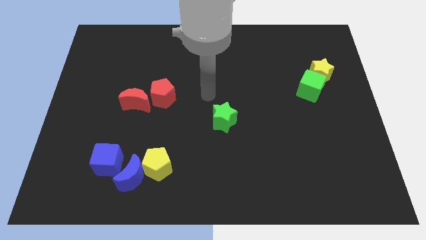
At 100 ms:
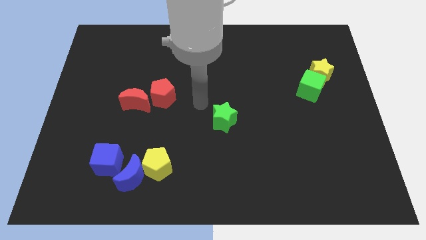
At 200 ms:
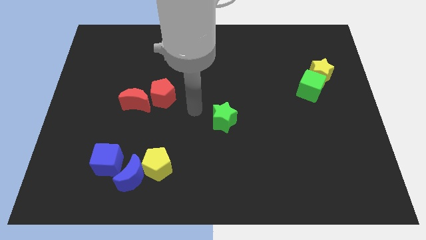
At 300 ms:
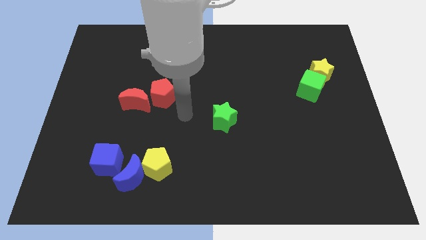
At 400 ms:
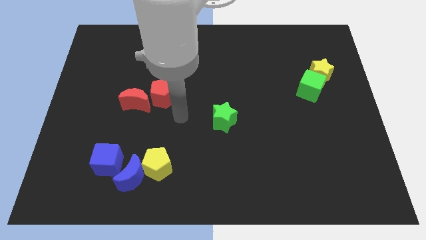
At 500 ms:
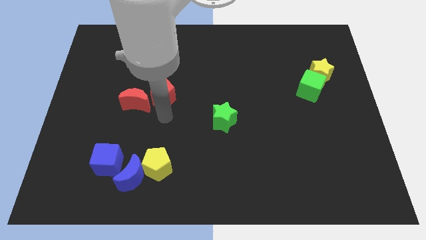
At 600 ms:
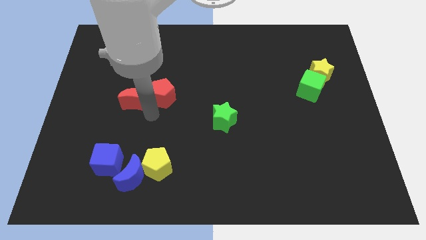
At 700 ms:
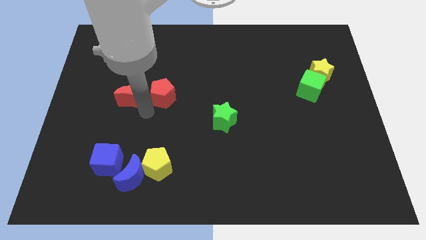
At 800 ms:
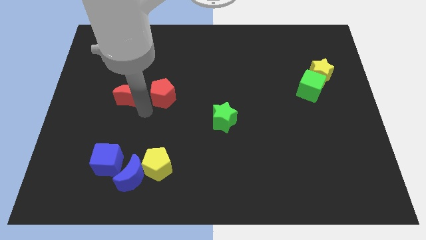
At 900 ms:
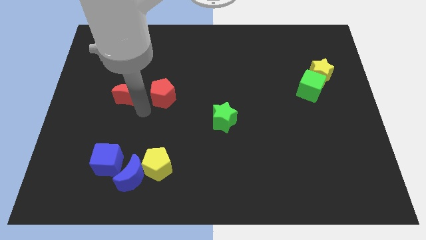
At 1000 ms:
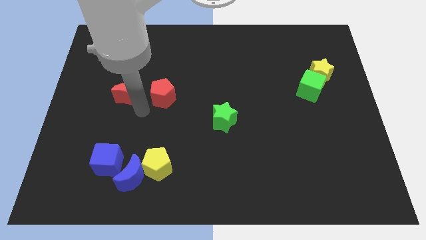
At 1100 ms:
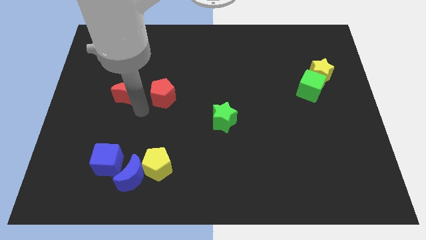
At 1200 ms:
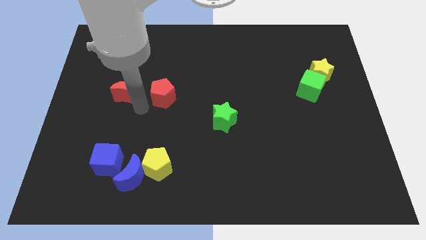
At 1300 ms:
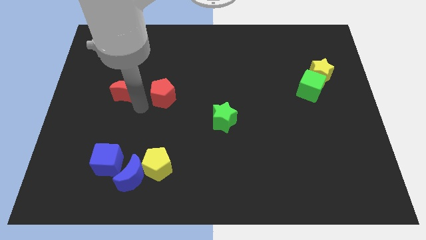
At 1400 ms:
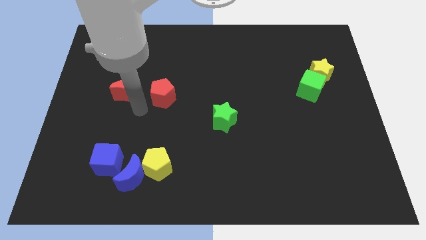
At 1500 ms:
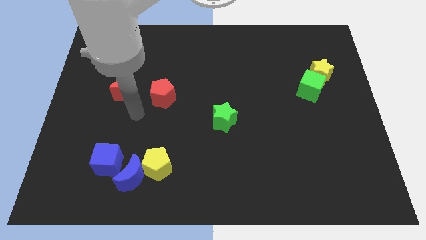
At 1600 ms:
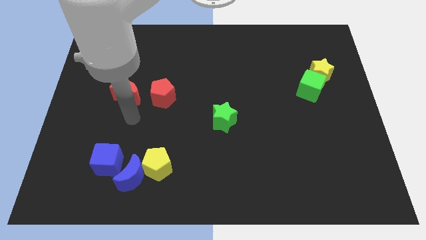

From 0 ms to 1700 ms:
move the red crescent away from the red pentagon

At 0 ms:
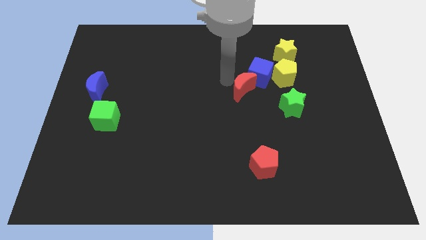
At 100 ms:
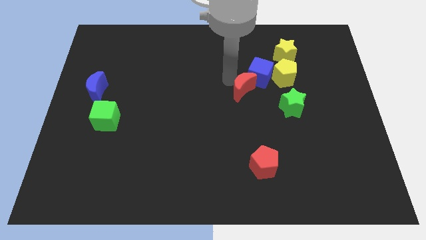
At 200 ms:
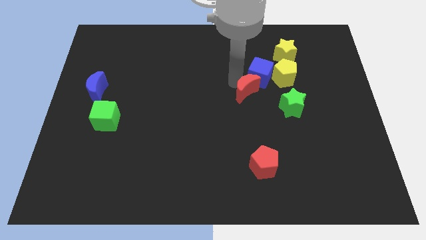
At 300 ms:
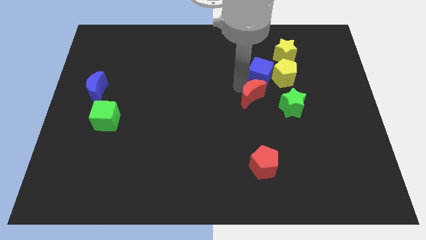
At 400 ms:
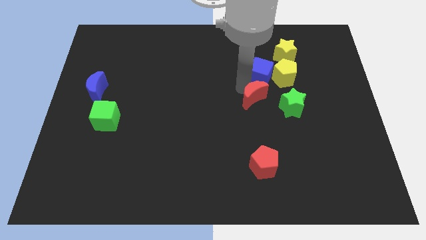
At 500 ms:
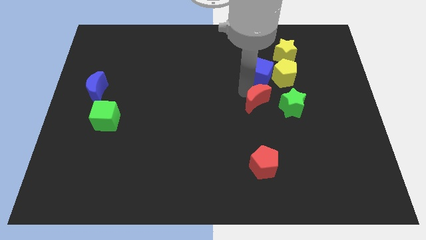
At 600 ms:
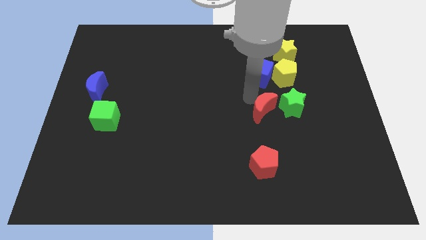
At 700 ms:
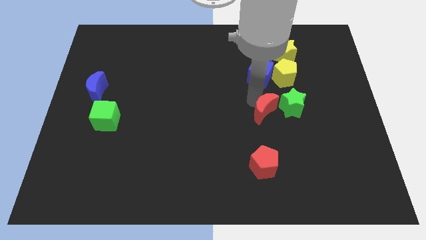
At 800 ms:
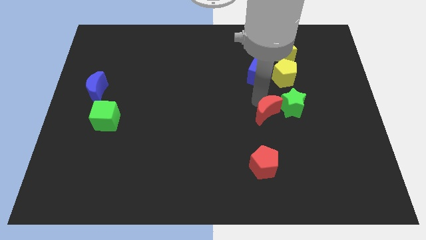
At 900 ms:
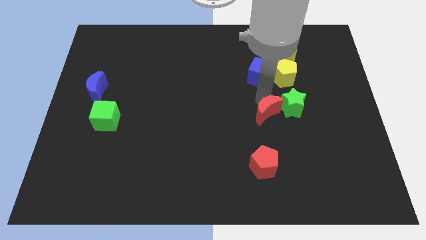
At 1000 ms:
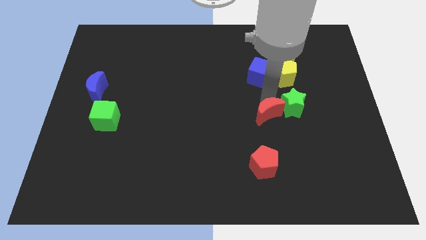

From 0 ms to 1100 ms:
push the red moon to the bottom left of the green star

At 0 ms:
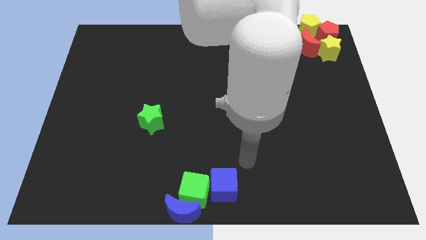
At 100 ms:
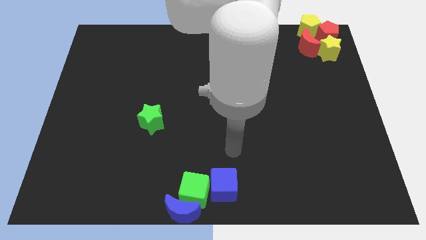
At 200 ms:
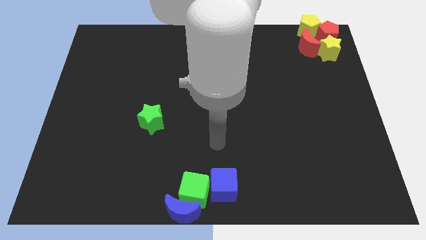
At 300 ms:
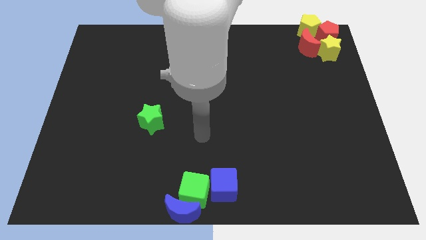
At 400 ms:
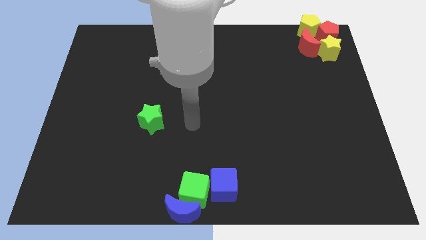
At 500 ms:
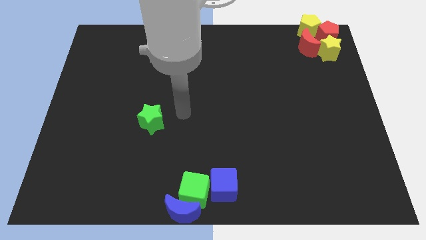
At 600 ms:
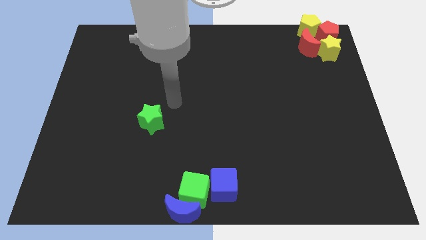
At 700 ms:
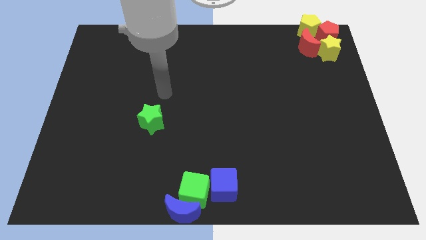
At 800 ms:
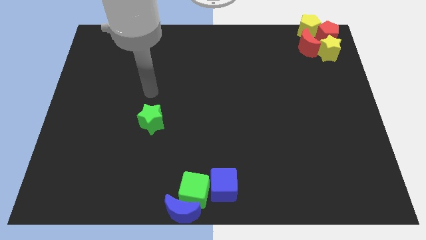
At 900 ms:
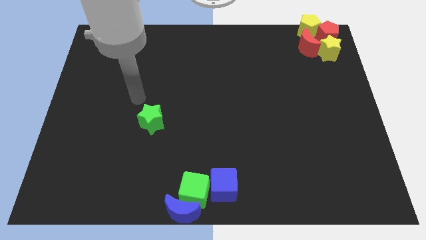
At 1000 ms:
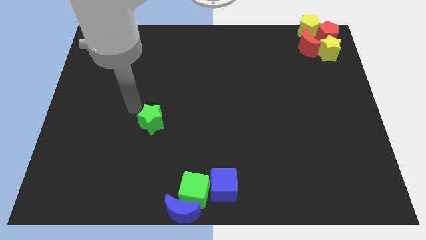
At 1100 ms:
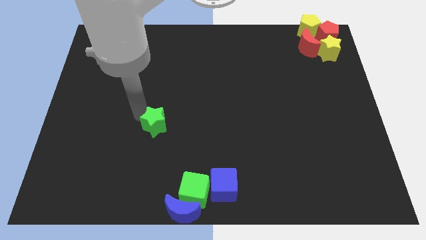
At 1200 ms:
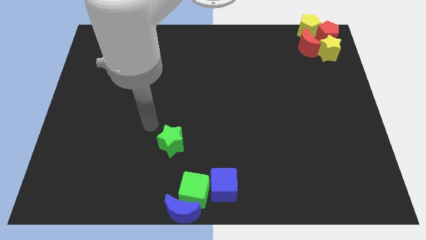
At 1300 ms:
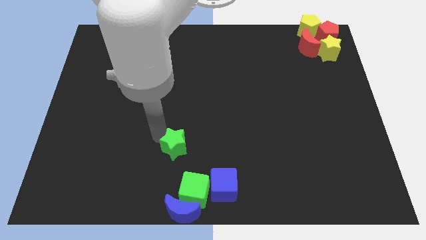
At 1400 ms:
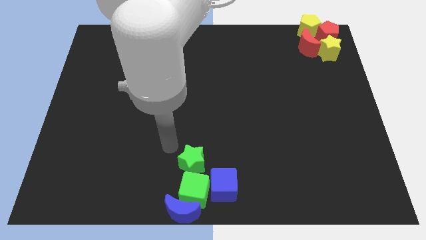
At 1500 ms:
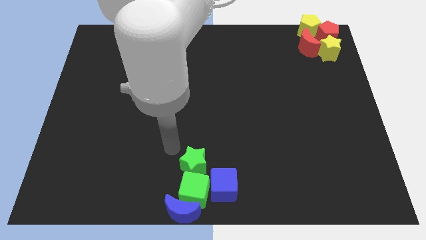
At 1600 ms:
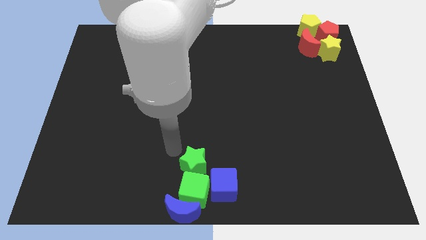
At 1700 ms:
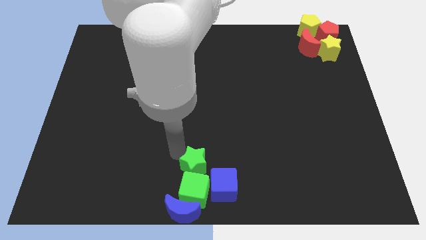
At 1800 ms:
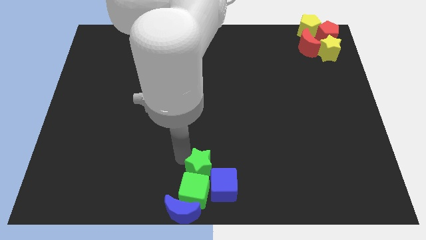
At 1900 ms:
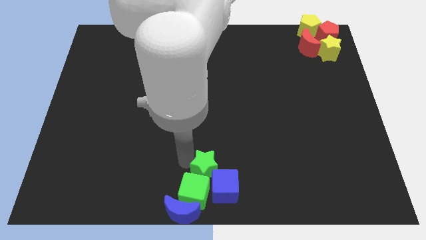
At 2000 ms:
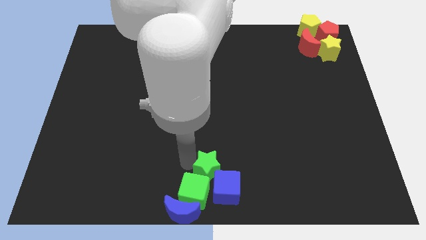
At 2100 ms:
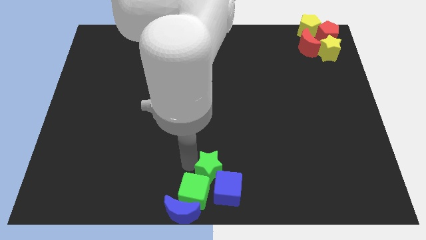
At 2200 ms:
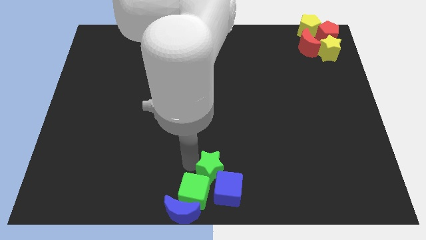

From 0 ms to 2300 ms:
add green star to the group of blocks at center of the bottom

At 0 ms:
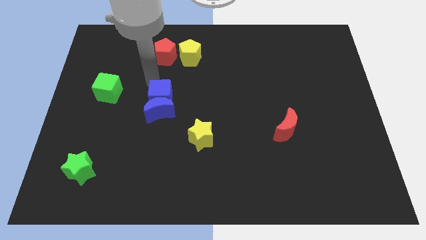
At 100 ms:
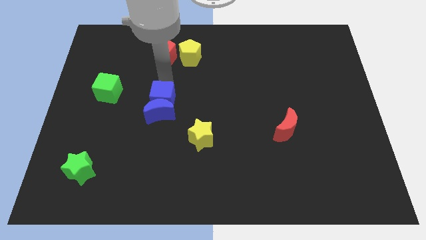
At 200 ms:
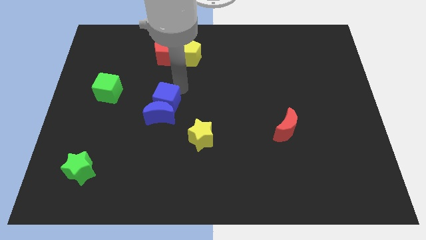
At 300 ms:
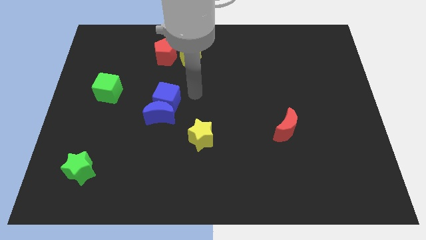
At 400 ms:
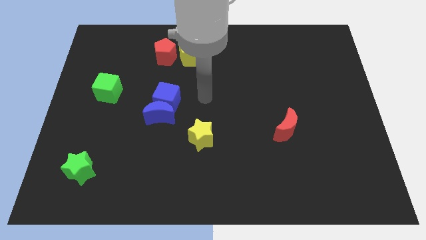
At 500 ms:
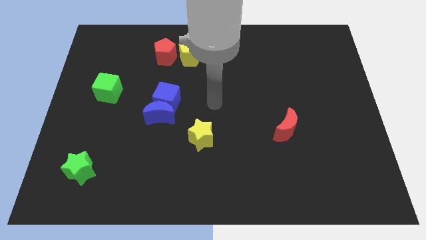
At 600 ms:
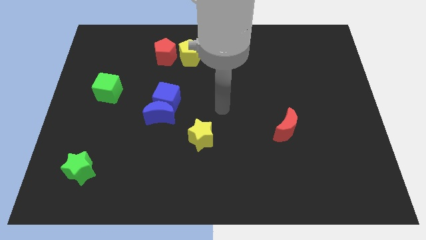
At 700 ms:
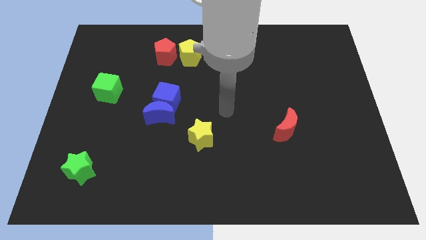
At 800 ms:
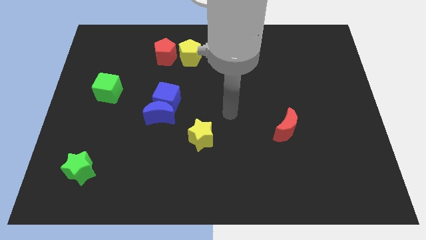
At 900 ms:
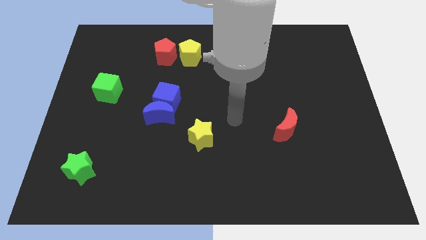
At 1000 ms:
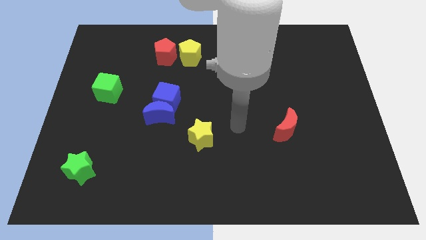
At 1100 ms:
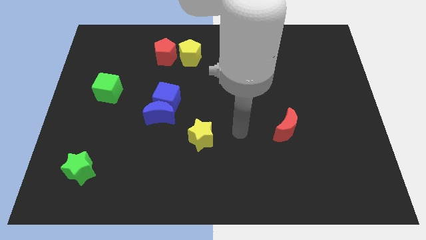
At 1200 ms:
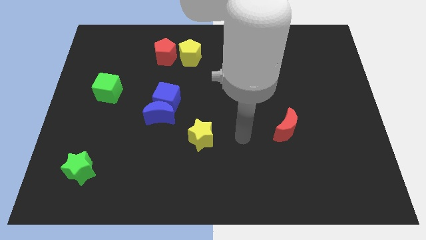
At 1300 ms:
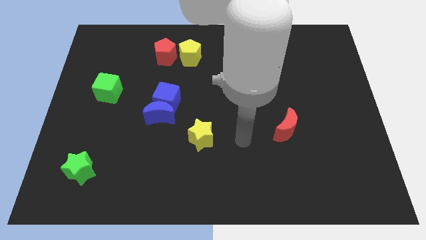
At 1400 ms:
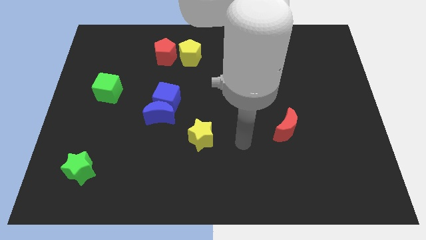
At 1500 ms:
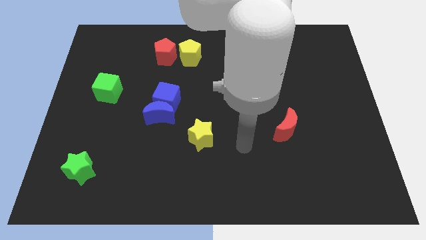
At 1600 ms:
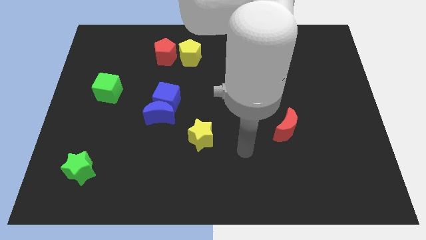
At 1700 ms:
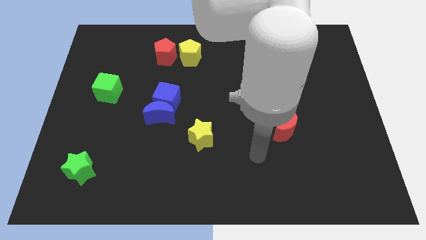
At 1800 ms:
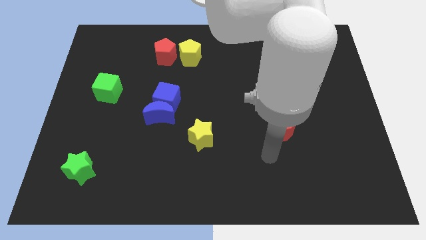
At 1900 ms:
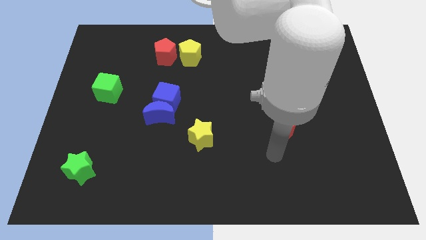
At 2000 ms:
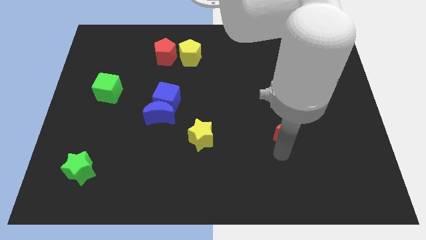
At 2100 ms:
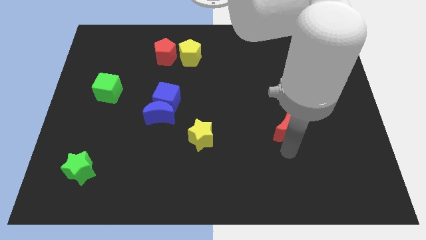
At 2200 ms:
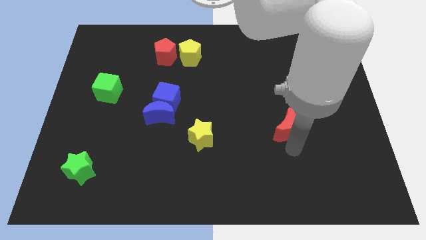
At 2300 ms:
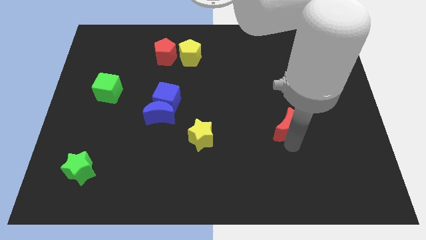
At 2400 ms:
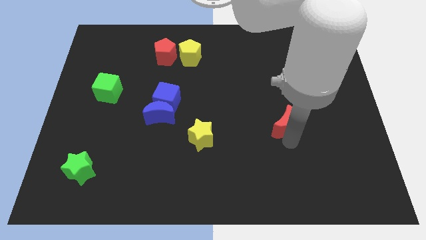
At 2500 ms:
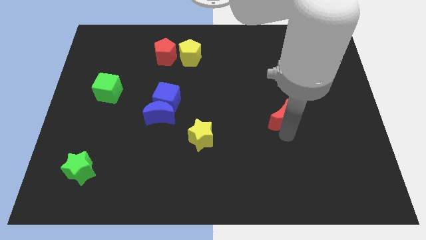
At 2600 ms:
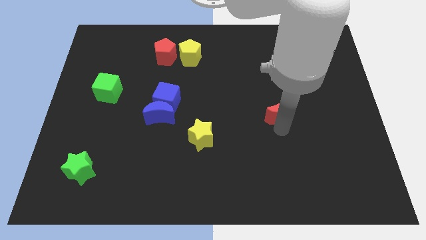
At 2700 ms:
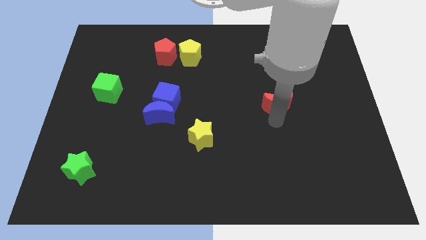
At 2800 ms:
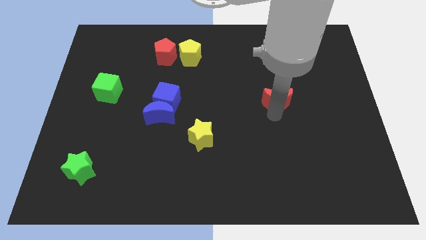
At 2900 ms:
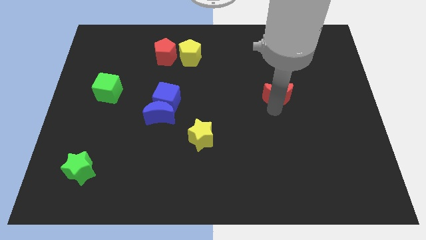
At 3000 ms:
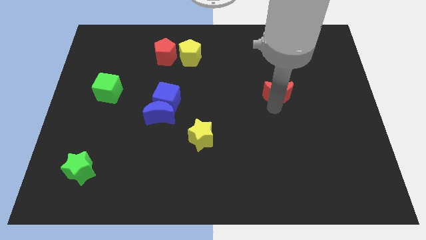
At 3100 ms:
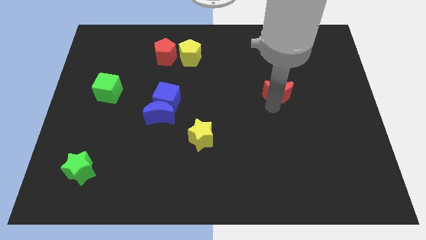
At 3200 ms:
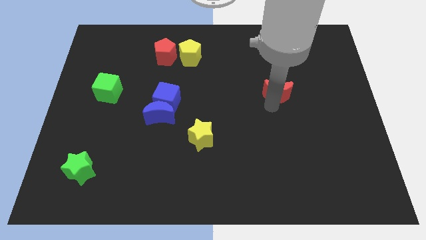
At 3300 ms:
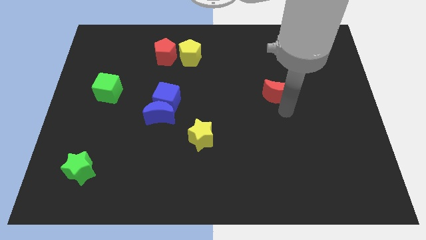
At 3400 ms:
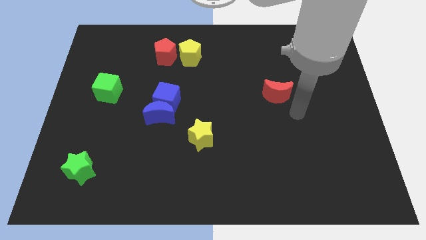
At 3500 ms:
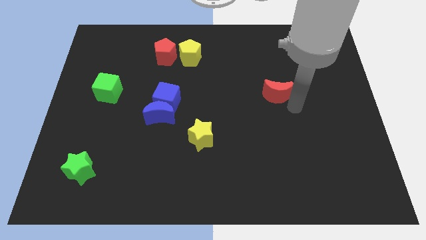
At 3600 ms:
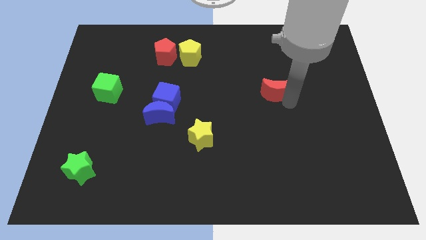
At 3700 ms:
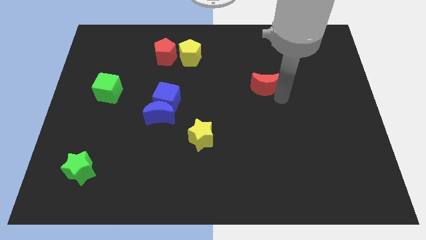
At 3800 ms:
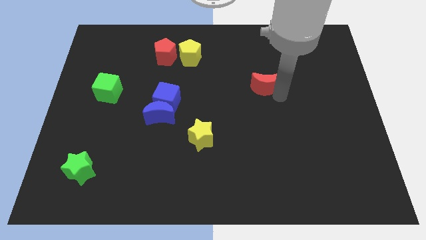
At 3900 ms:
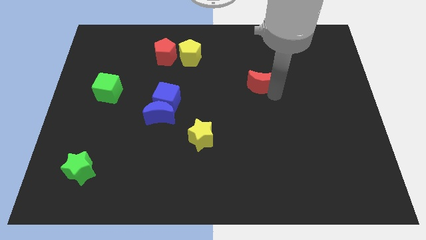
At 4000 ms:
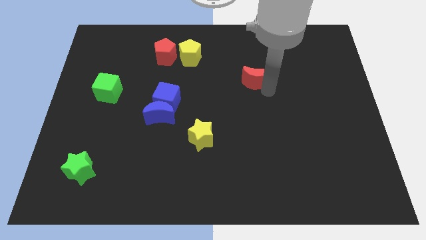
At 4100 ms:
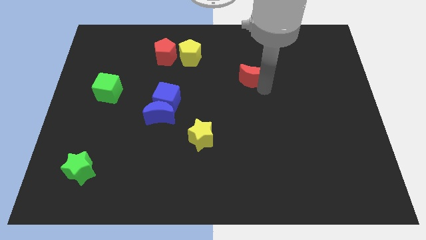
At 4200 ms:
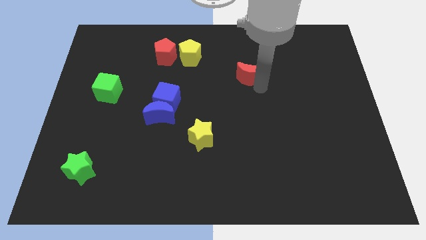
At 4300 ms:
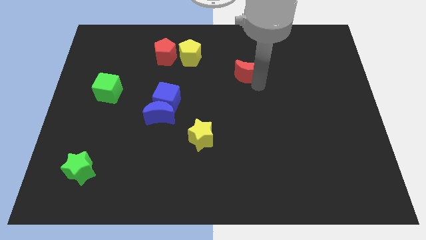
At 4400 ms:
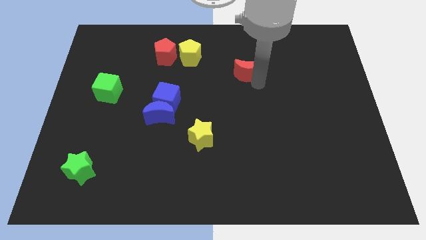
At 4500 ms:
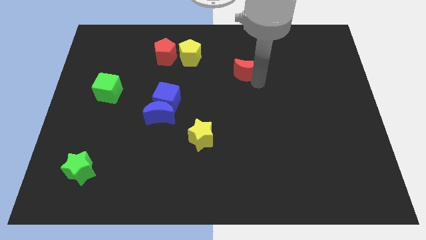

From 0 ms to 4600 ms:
slide the red moon to the bottom right side of the yellow pentagon
